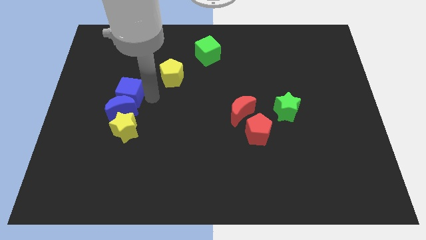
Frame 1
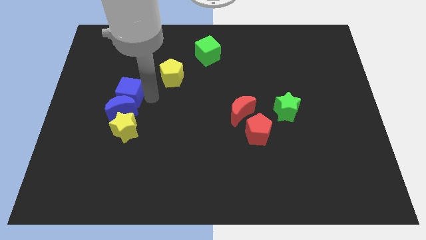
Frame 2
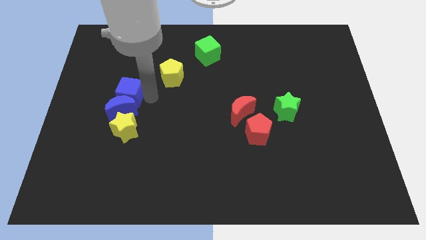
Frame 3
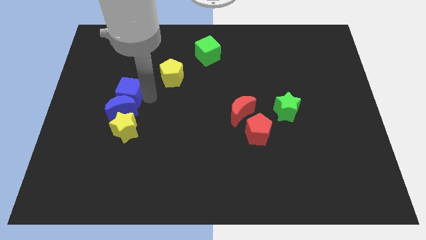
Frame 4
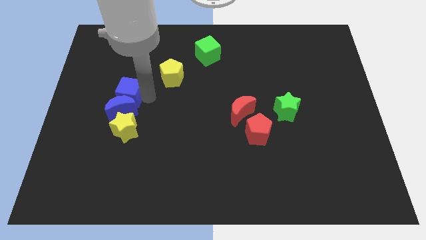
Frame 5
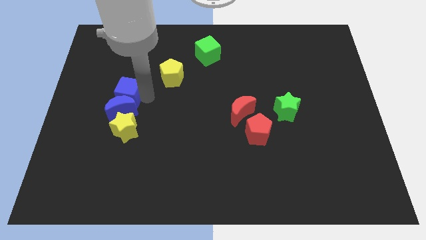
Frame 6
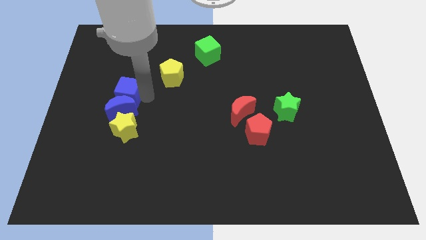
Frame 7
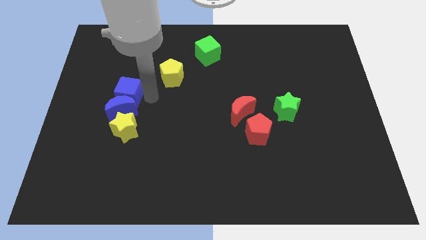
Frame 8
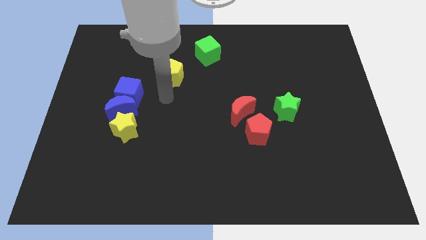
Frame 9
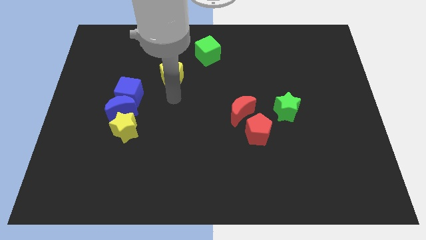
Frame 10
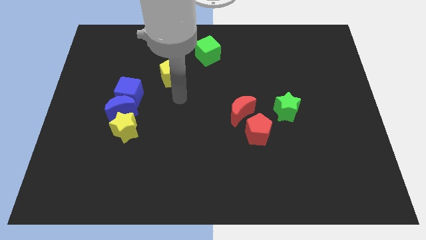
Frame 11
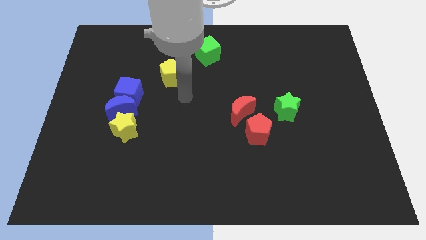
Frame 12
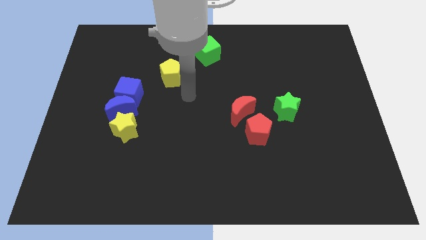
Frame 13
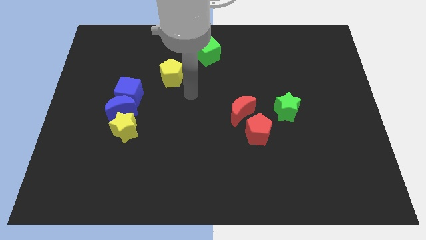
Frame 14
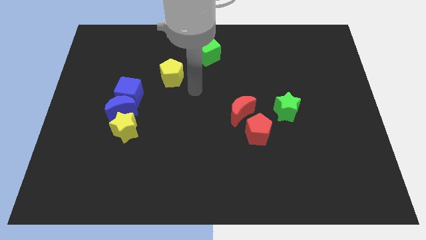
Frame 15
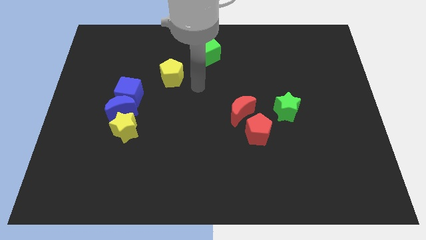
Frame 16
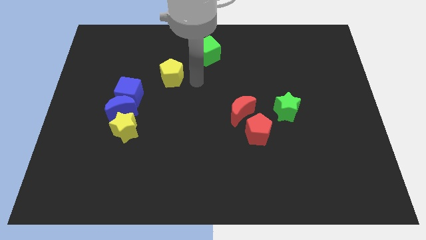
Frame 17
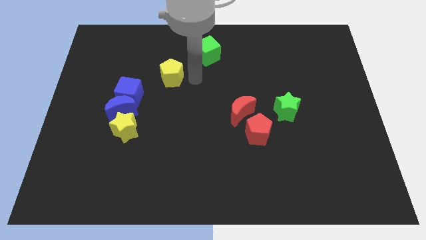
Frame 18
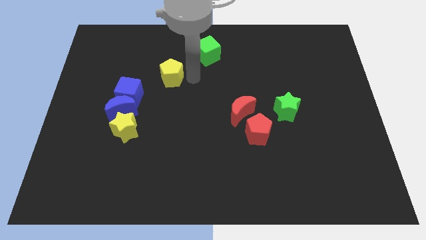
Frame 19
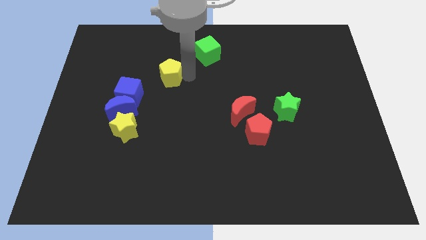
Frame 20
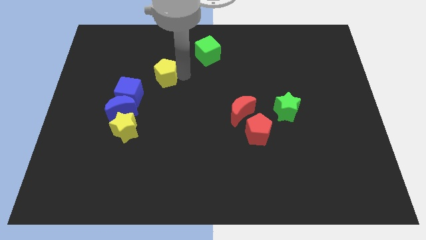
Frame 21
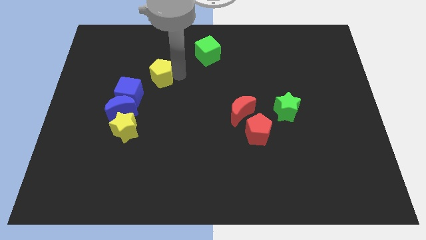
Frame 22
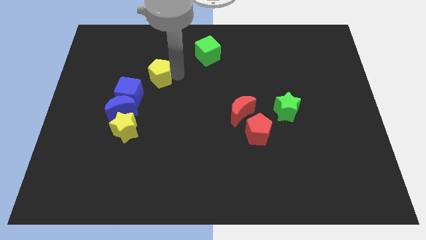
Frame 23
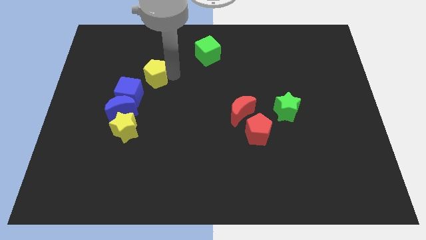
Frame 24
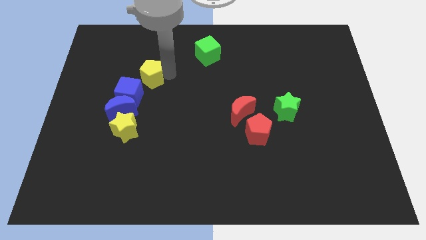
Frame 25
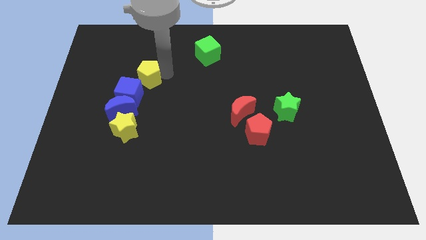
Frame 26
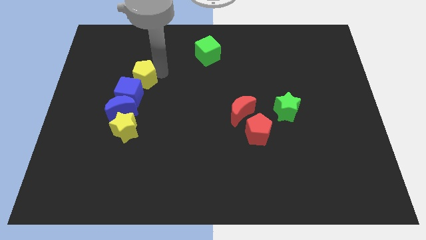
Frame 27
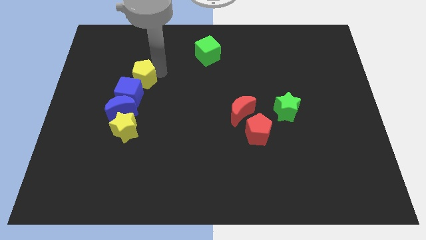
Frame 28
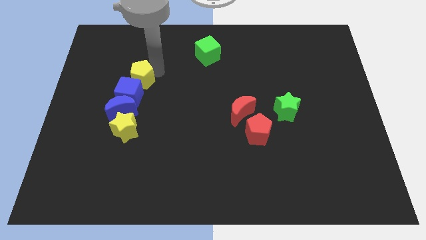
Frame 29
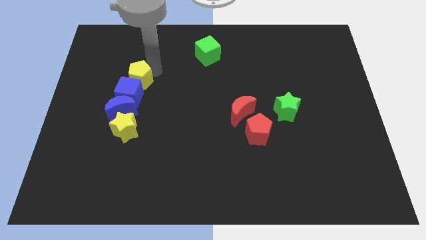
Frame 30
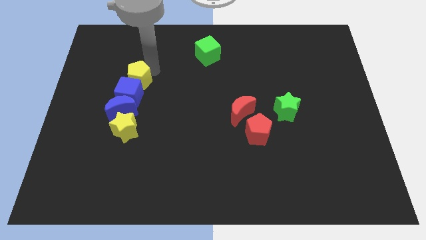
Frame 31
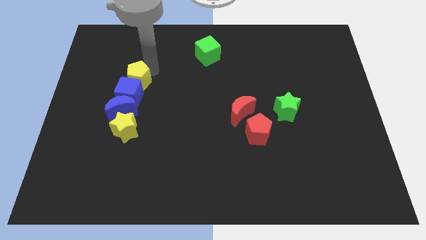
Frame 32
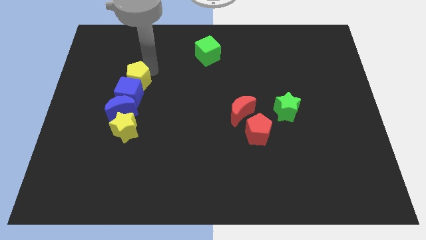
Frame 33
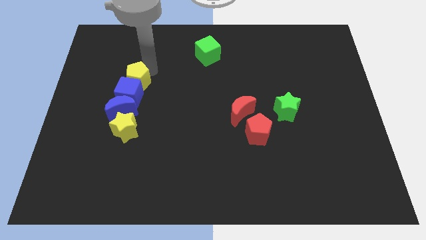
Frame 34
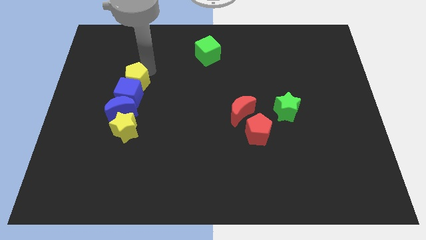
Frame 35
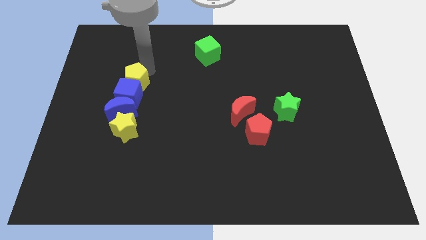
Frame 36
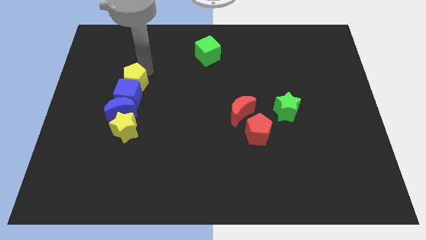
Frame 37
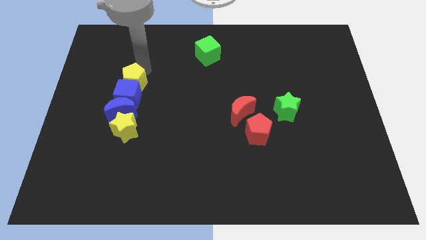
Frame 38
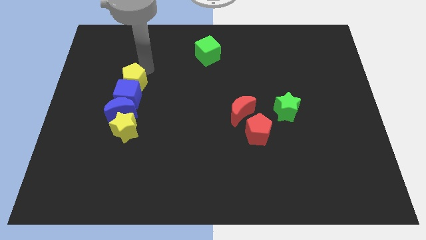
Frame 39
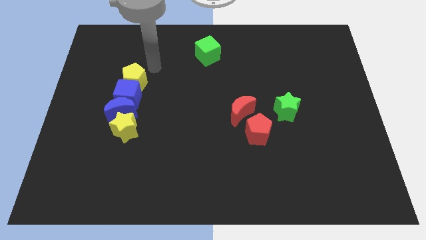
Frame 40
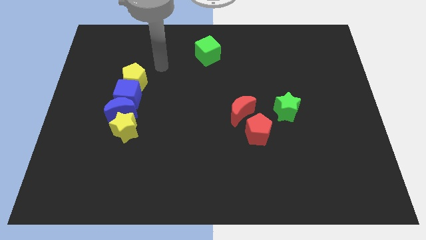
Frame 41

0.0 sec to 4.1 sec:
slide the yellow pentagon to the top of the blue cube

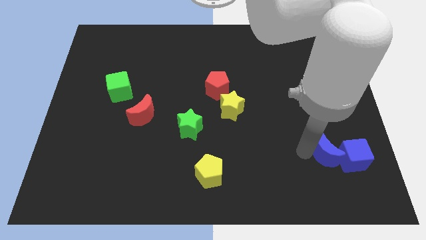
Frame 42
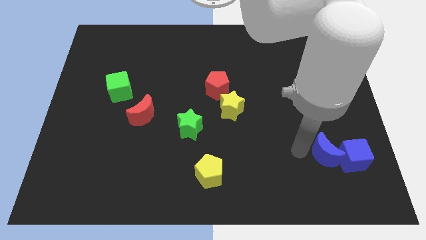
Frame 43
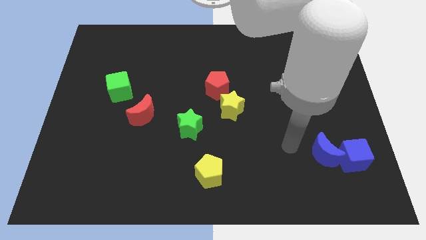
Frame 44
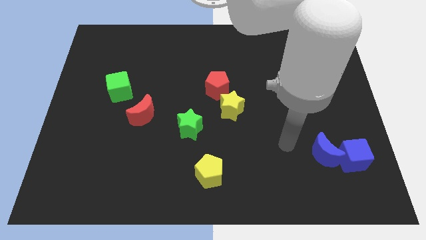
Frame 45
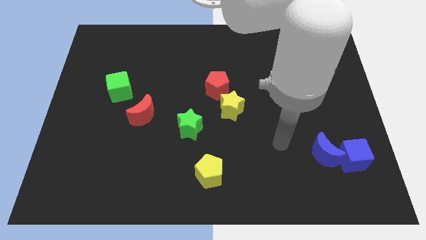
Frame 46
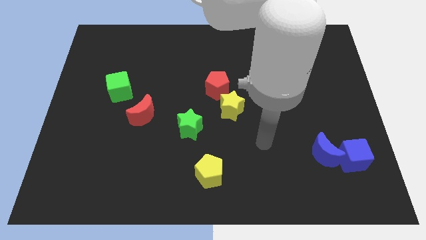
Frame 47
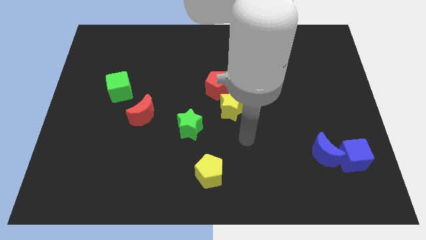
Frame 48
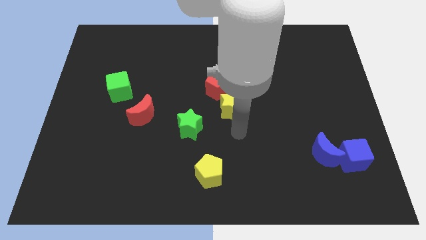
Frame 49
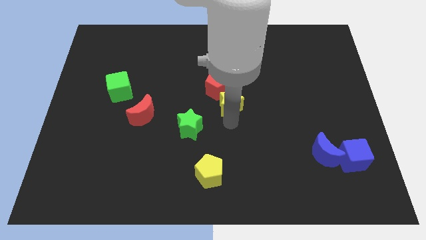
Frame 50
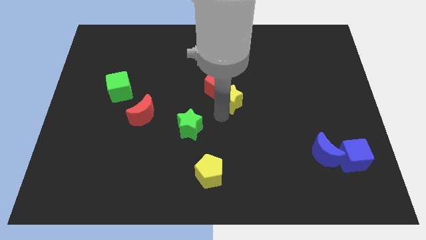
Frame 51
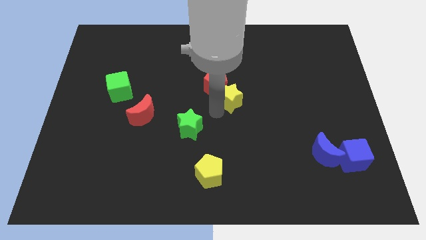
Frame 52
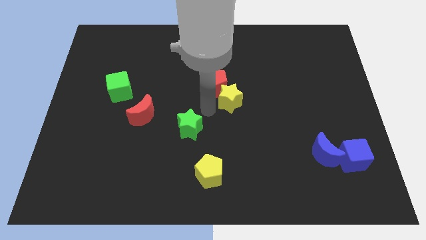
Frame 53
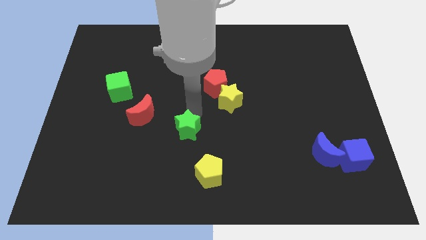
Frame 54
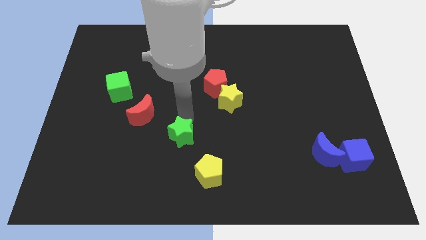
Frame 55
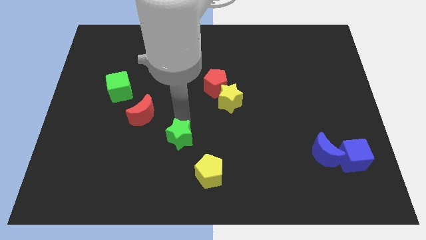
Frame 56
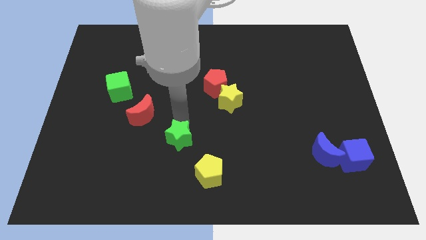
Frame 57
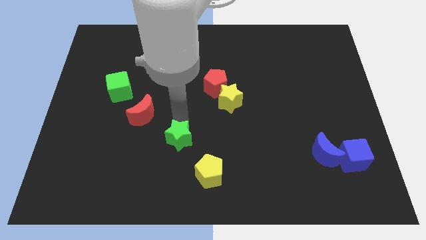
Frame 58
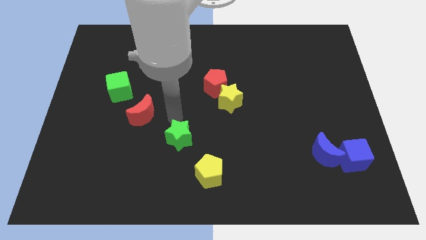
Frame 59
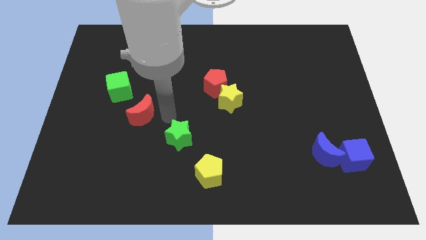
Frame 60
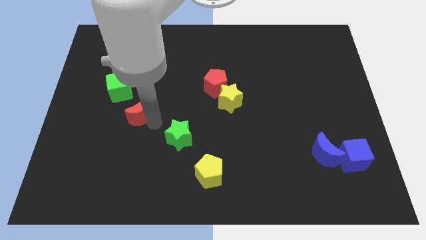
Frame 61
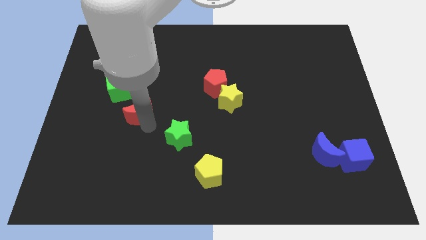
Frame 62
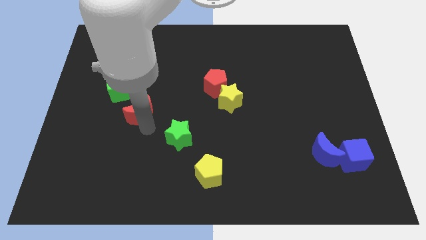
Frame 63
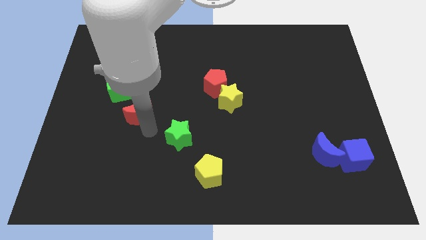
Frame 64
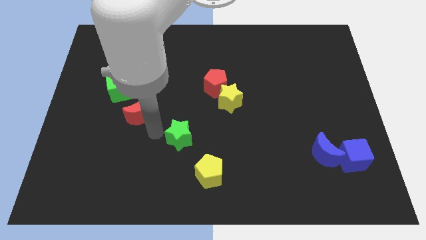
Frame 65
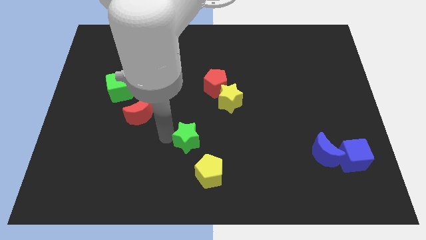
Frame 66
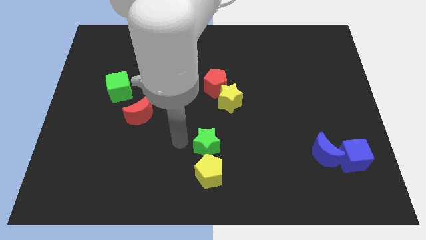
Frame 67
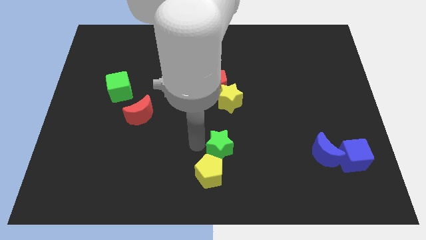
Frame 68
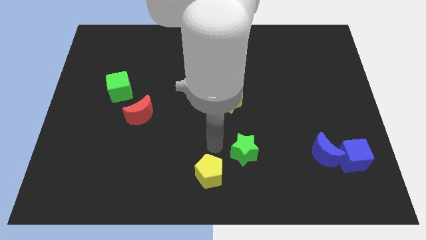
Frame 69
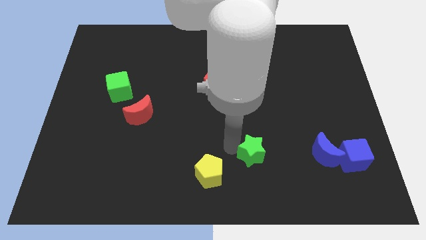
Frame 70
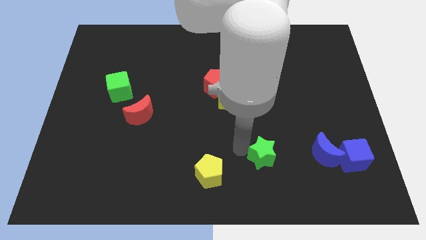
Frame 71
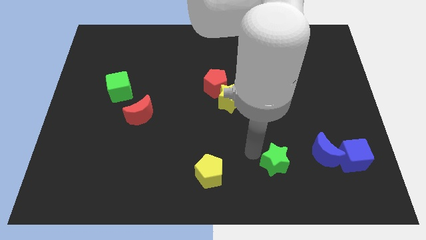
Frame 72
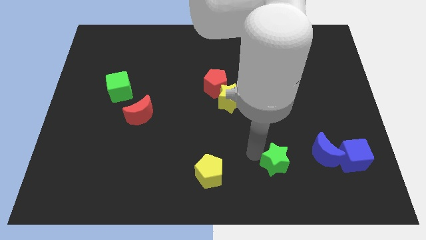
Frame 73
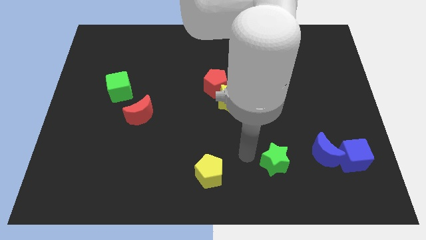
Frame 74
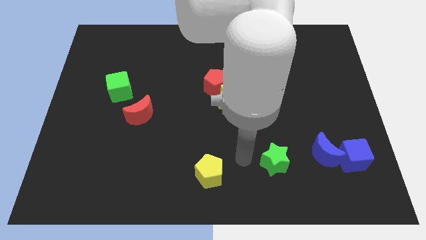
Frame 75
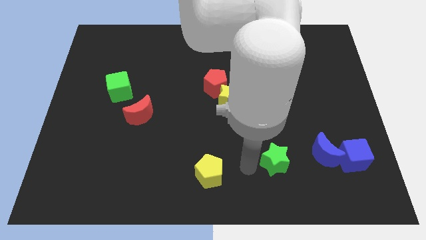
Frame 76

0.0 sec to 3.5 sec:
place the green star left to the blue moon

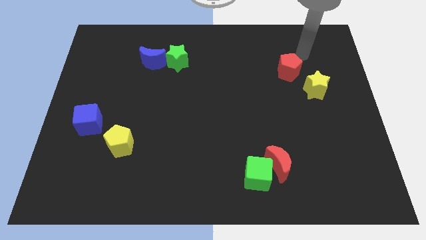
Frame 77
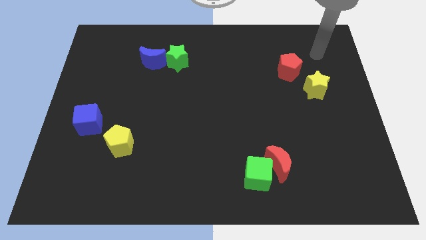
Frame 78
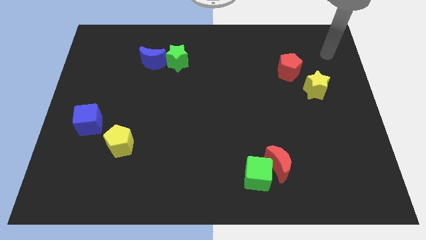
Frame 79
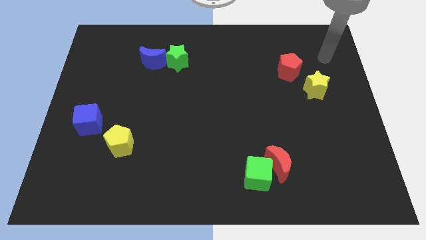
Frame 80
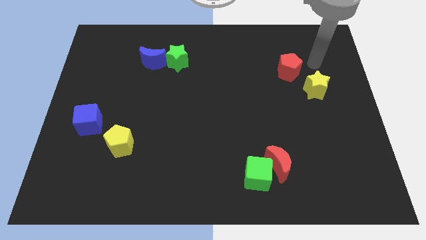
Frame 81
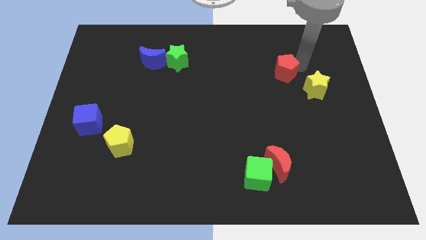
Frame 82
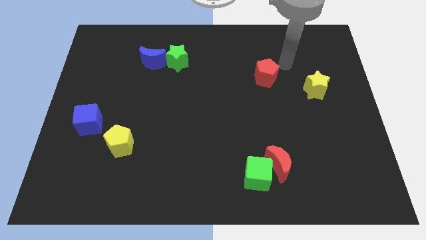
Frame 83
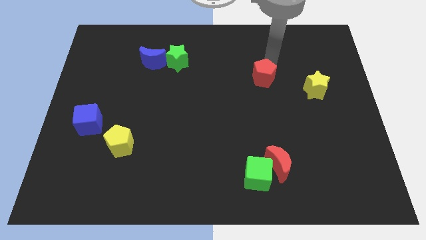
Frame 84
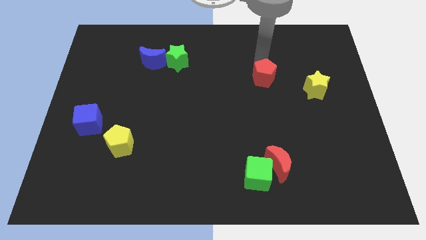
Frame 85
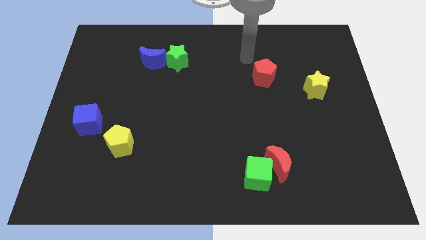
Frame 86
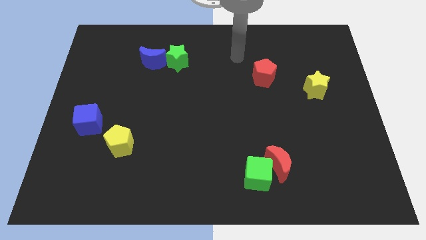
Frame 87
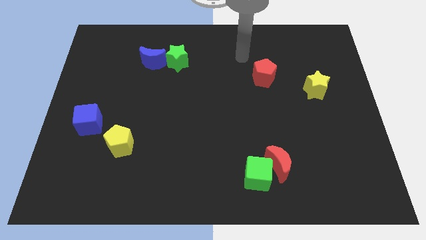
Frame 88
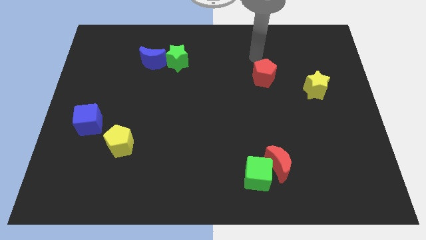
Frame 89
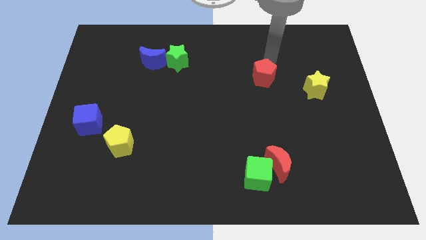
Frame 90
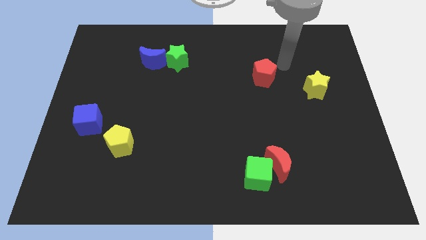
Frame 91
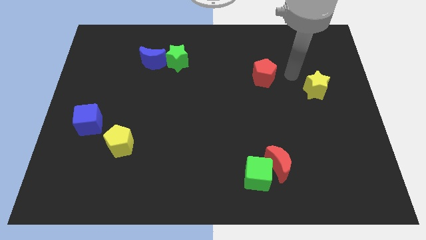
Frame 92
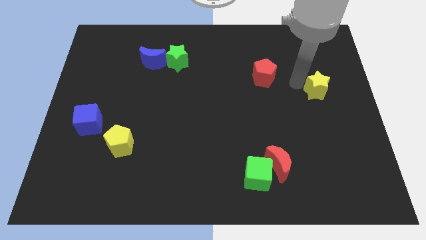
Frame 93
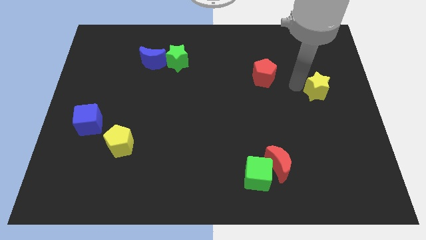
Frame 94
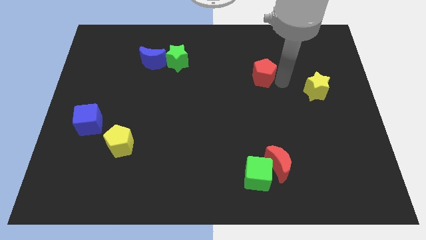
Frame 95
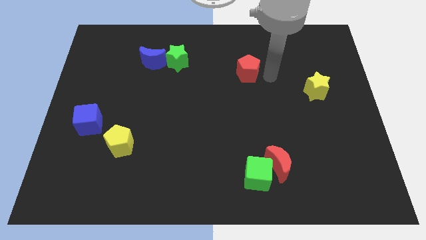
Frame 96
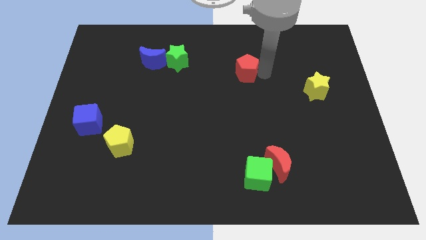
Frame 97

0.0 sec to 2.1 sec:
move the red pentagon towards the left
